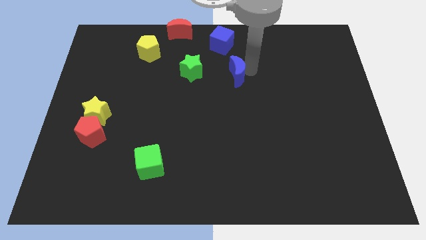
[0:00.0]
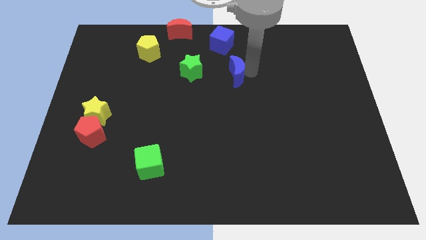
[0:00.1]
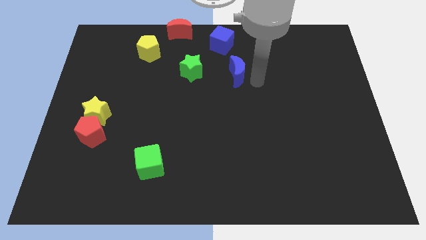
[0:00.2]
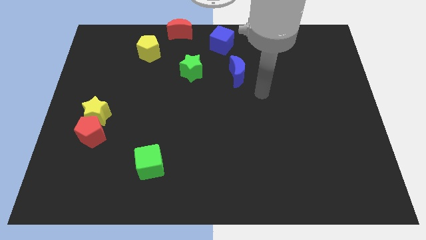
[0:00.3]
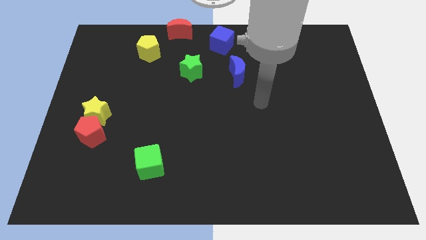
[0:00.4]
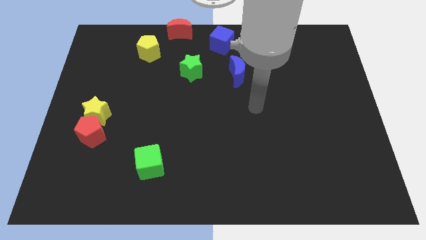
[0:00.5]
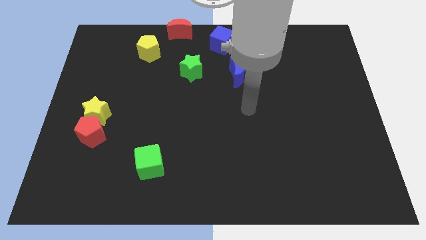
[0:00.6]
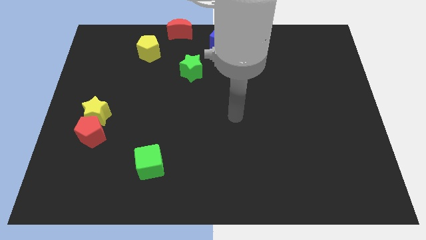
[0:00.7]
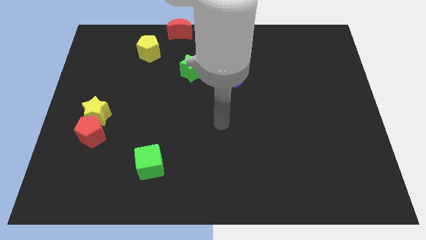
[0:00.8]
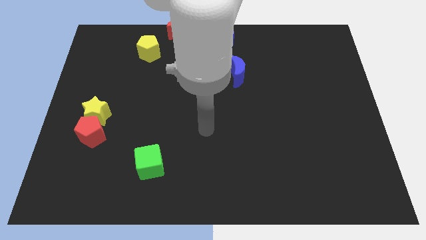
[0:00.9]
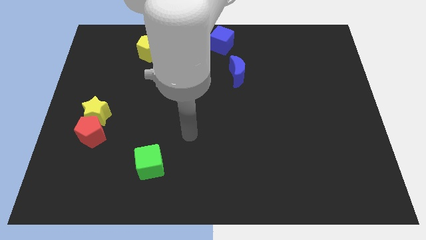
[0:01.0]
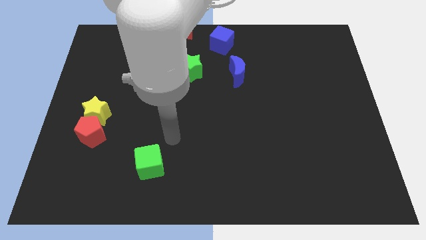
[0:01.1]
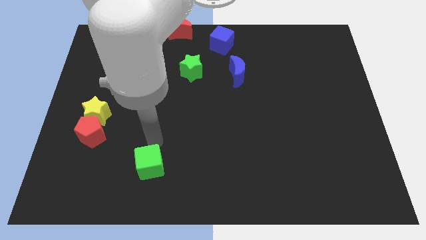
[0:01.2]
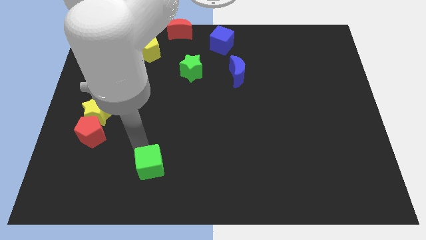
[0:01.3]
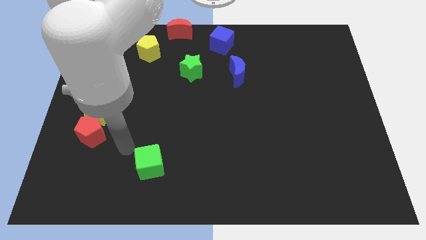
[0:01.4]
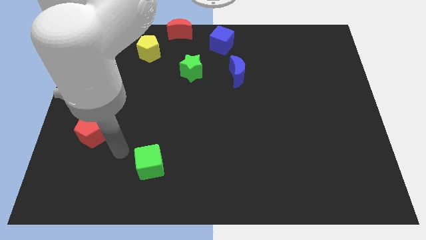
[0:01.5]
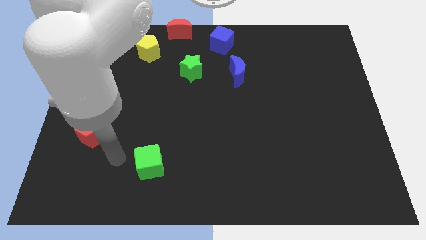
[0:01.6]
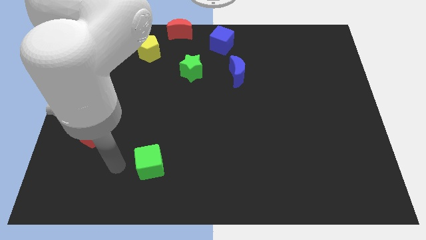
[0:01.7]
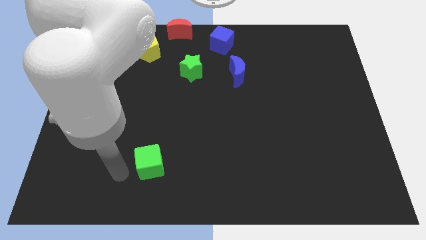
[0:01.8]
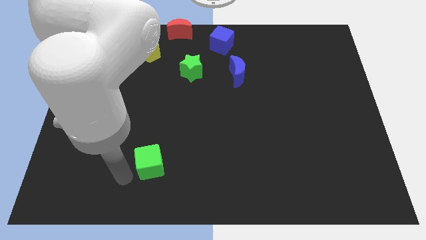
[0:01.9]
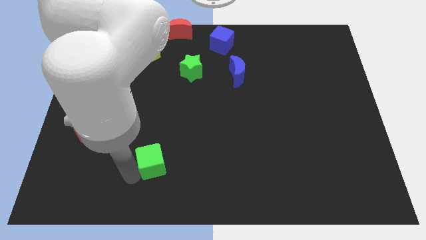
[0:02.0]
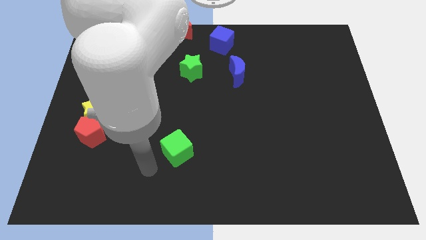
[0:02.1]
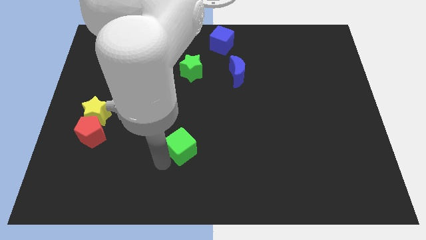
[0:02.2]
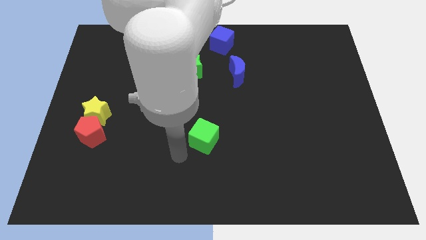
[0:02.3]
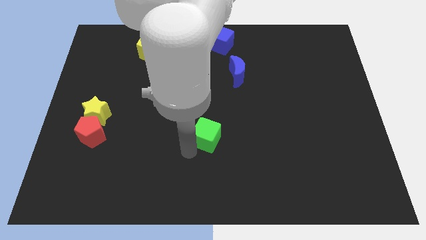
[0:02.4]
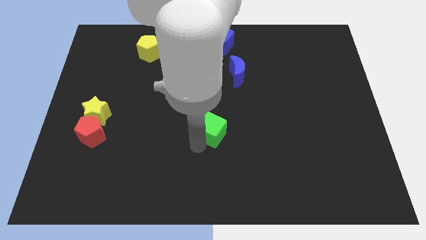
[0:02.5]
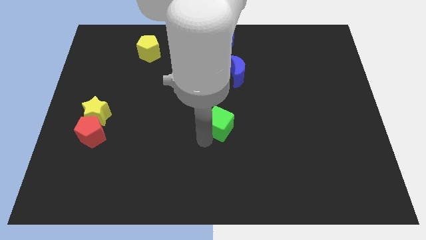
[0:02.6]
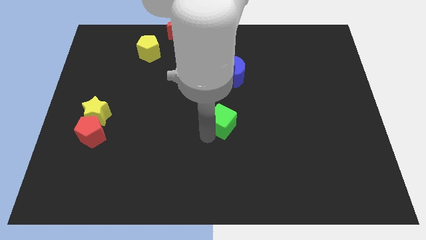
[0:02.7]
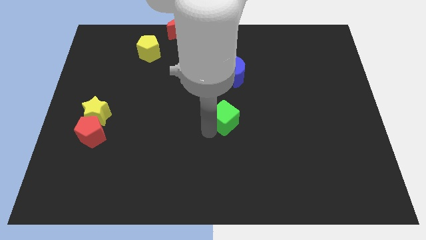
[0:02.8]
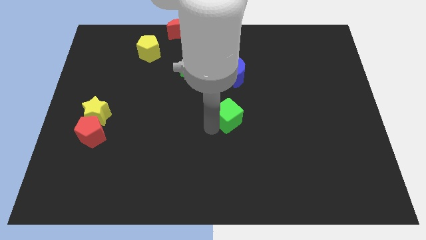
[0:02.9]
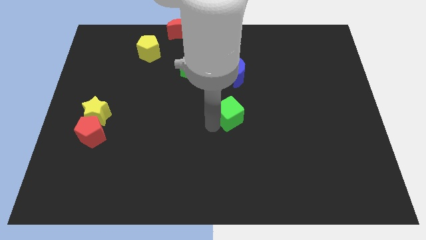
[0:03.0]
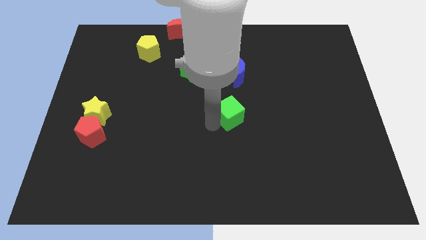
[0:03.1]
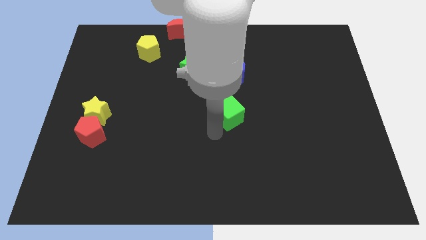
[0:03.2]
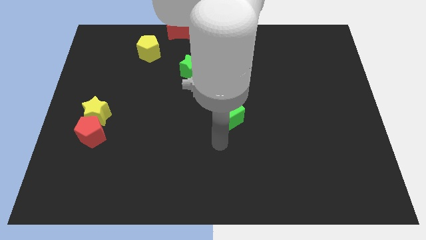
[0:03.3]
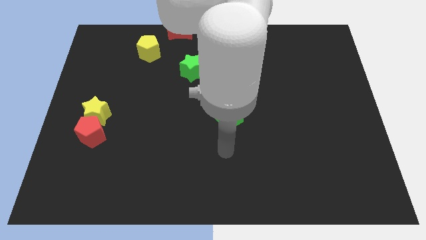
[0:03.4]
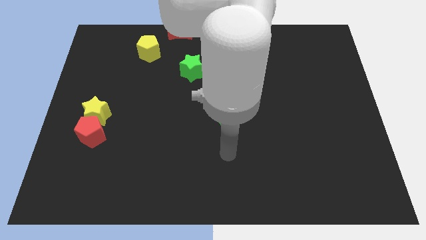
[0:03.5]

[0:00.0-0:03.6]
push the green star to the center of the board

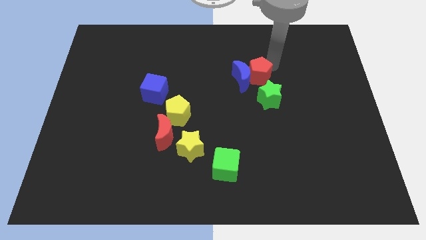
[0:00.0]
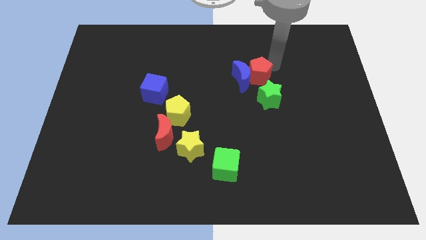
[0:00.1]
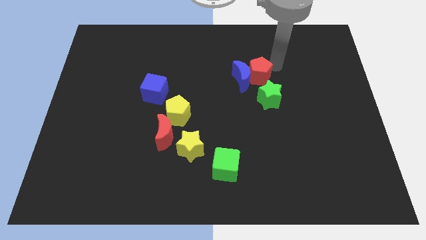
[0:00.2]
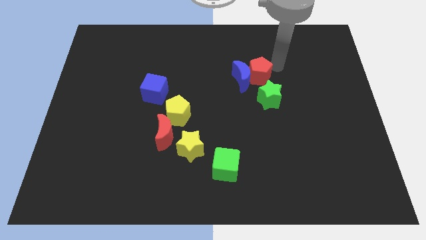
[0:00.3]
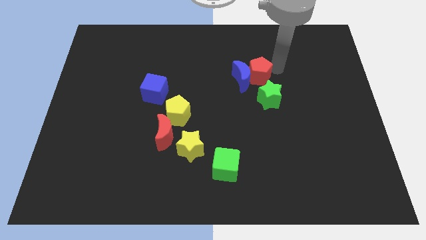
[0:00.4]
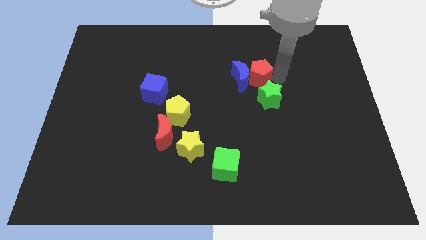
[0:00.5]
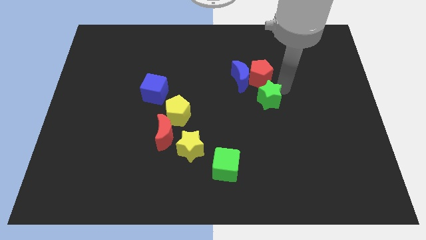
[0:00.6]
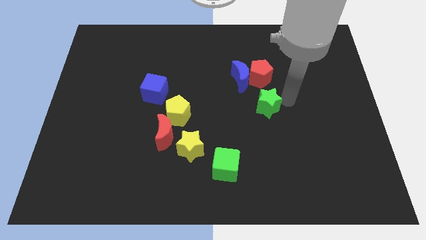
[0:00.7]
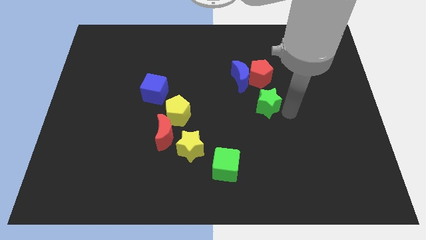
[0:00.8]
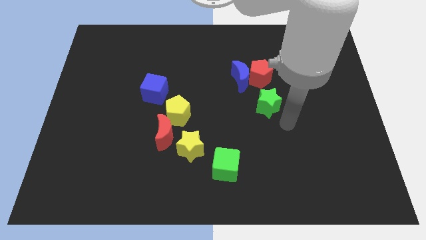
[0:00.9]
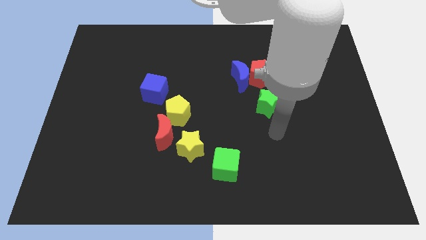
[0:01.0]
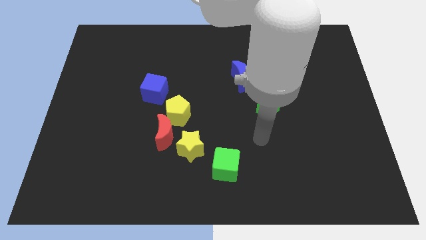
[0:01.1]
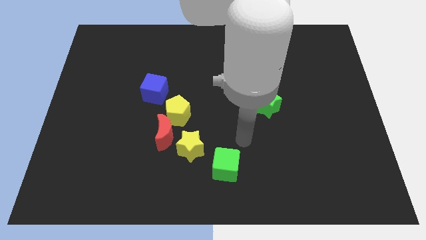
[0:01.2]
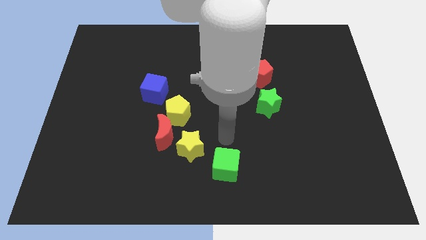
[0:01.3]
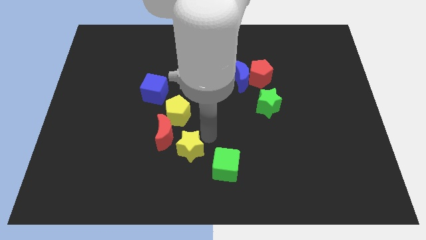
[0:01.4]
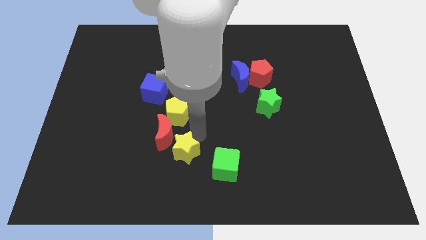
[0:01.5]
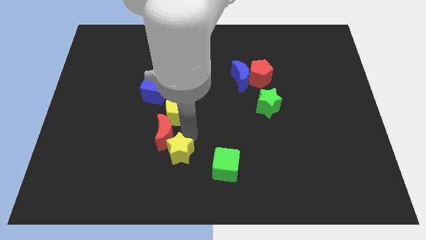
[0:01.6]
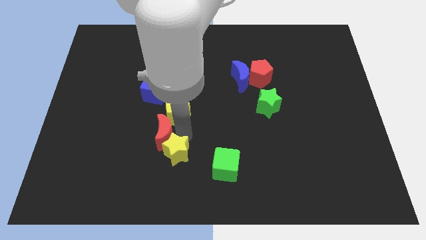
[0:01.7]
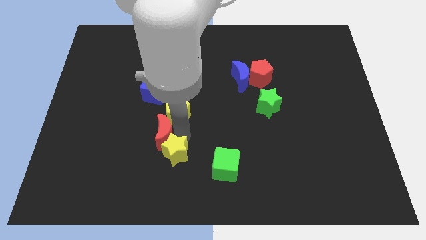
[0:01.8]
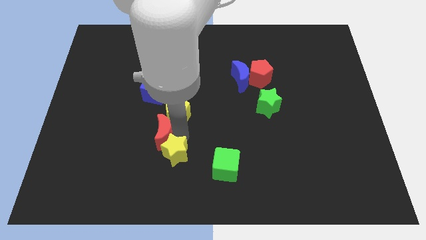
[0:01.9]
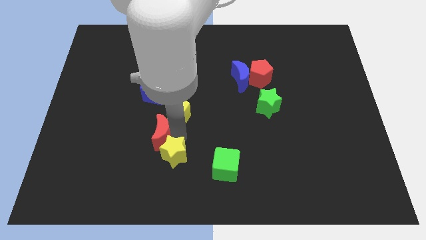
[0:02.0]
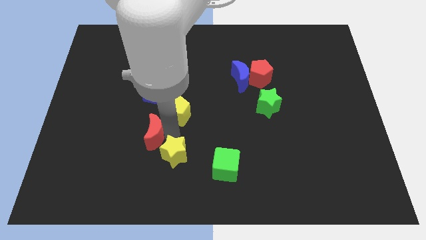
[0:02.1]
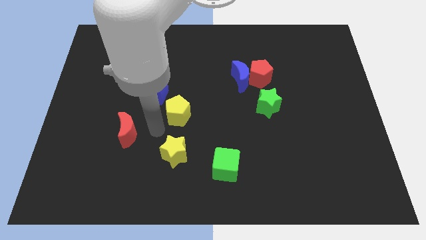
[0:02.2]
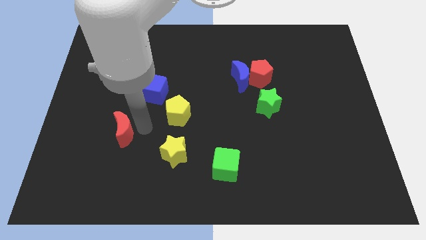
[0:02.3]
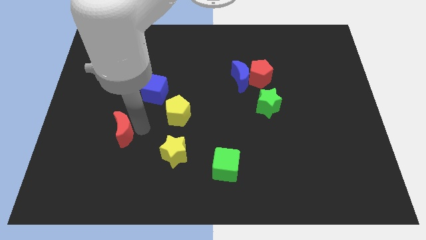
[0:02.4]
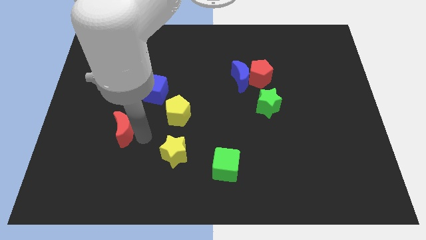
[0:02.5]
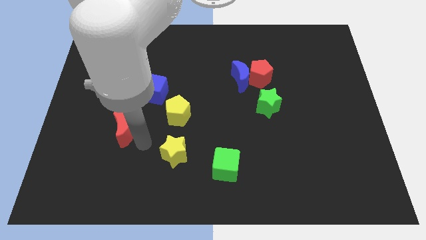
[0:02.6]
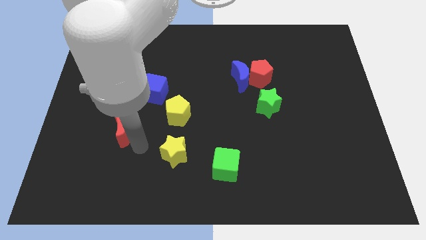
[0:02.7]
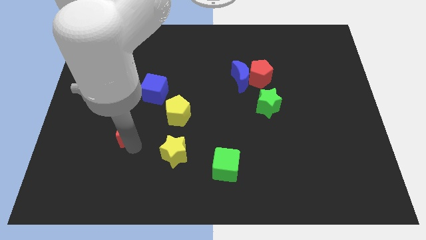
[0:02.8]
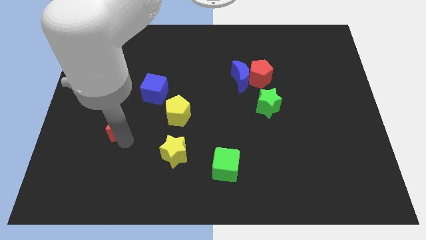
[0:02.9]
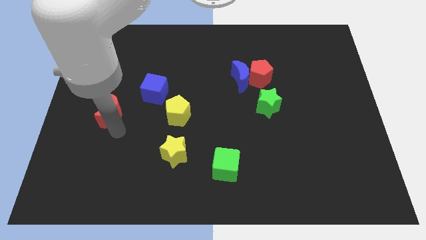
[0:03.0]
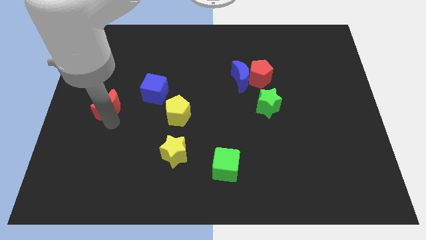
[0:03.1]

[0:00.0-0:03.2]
move the red moon diagonally to the blue cube

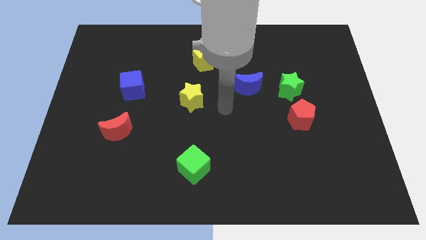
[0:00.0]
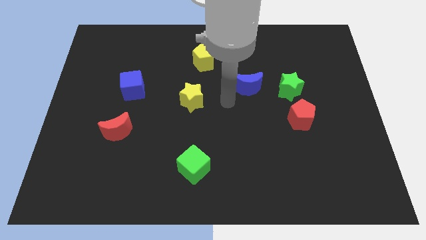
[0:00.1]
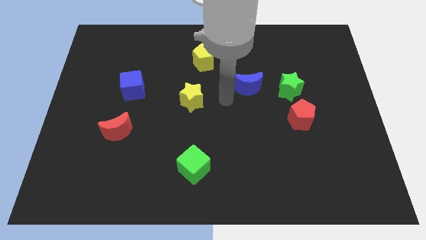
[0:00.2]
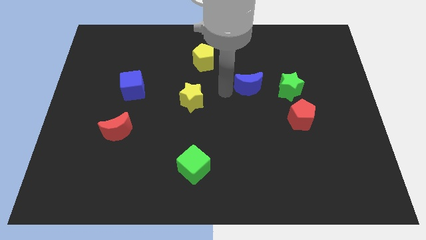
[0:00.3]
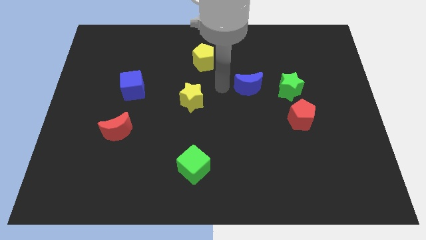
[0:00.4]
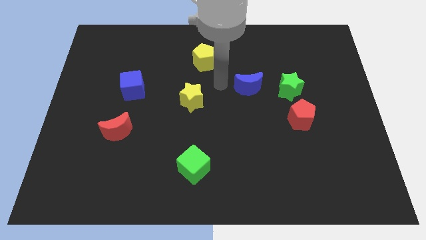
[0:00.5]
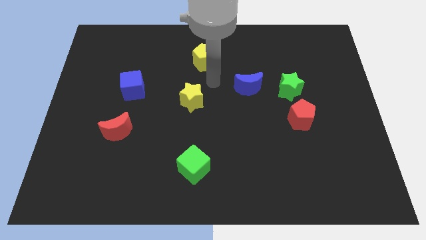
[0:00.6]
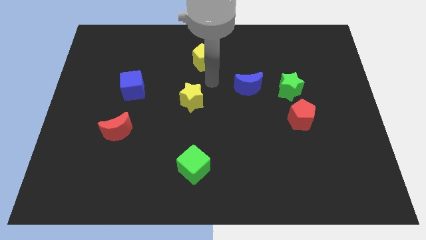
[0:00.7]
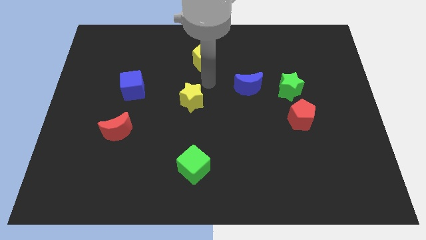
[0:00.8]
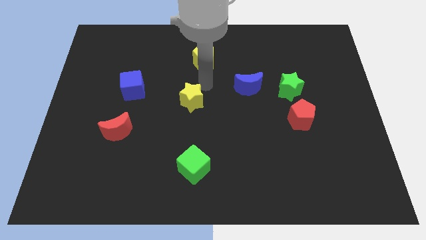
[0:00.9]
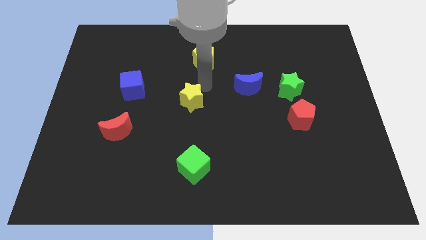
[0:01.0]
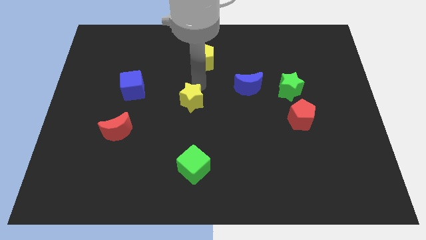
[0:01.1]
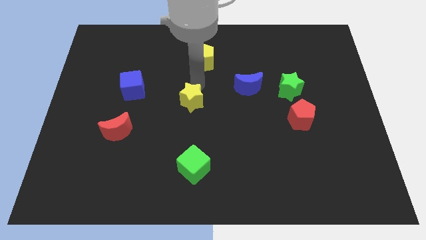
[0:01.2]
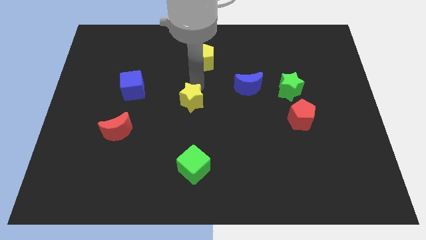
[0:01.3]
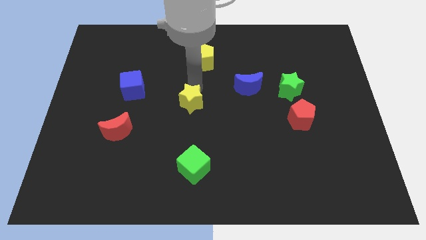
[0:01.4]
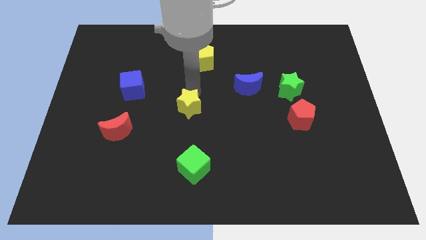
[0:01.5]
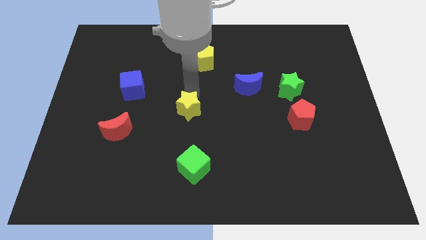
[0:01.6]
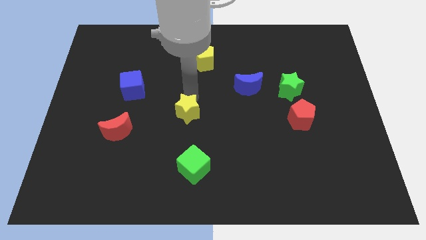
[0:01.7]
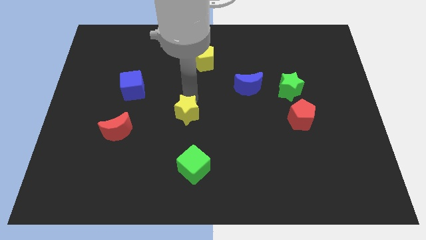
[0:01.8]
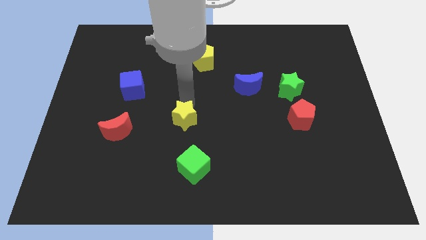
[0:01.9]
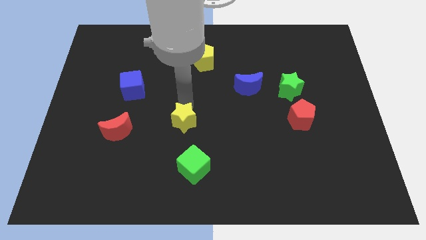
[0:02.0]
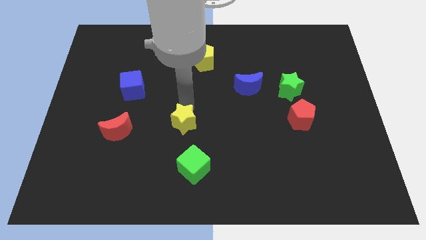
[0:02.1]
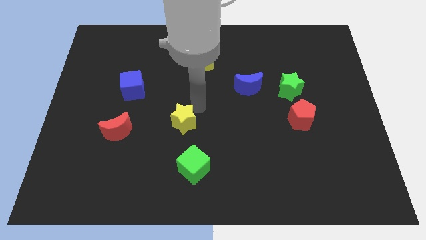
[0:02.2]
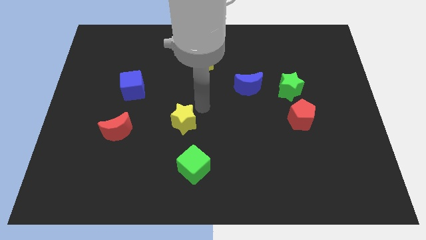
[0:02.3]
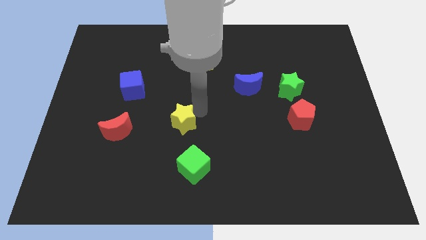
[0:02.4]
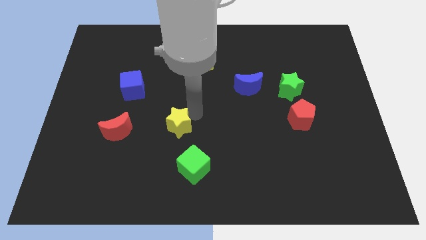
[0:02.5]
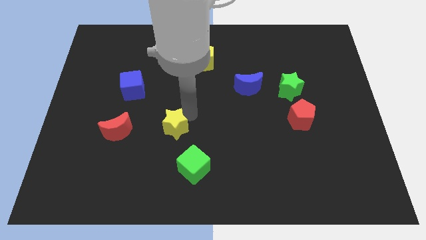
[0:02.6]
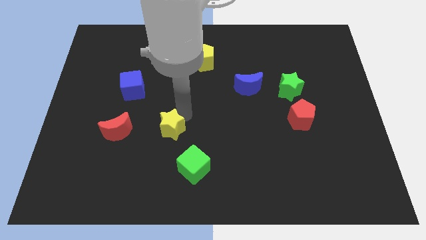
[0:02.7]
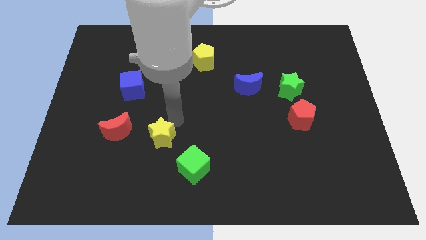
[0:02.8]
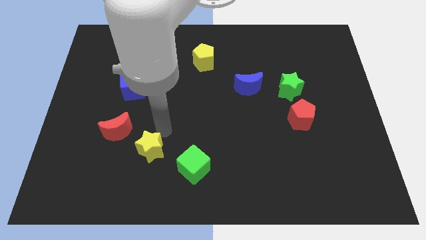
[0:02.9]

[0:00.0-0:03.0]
place the yellow star in between the red crescent and green cube
